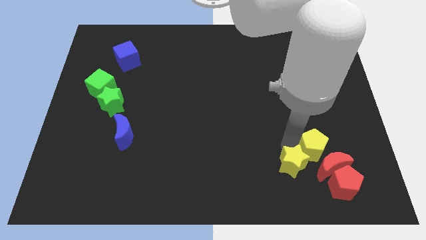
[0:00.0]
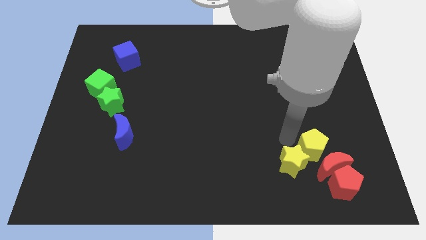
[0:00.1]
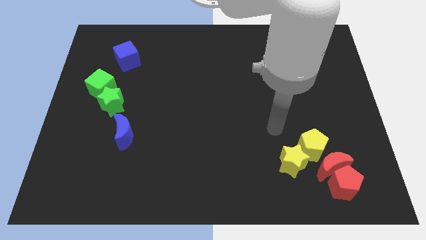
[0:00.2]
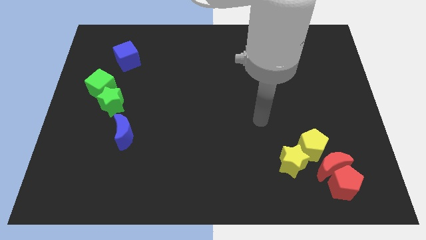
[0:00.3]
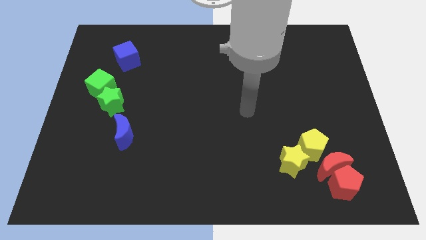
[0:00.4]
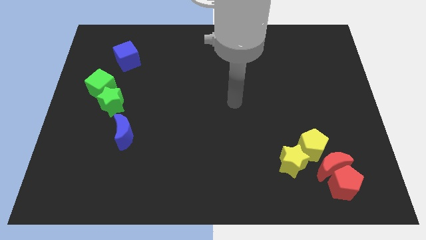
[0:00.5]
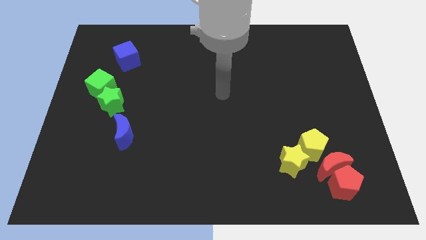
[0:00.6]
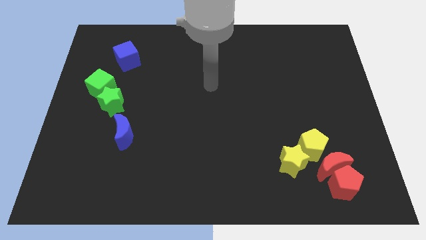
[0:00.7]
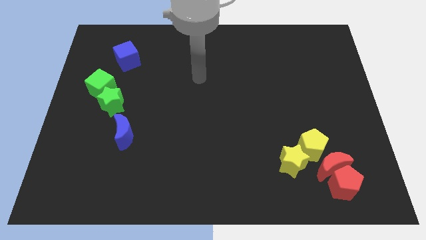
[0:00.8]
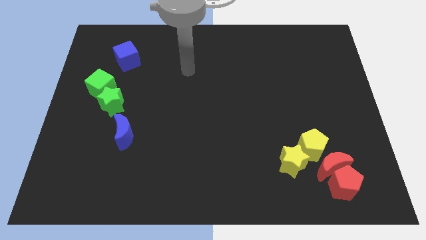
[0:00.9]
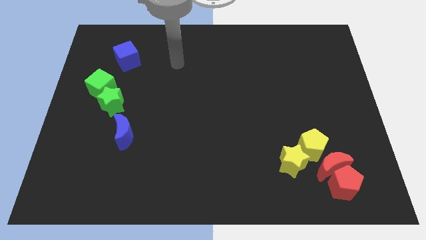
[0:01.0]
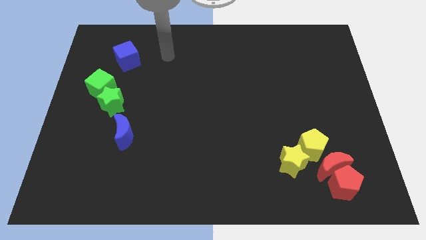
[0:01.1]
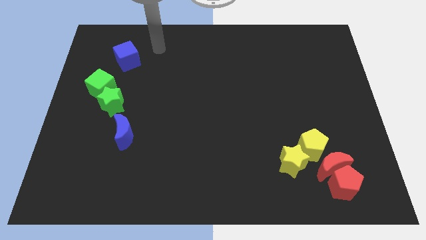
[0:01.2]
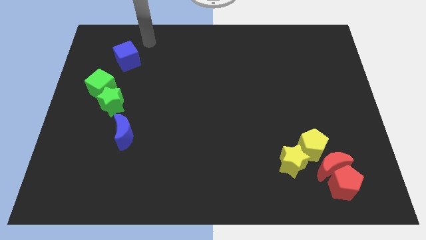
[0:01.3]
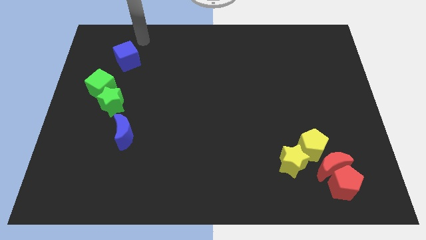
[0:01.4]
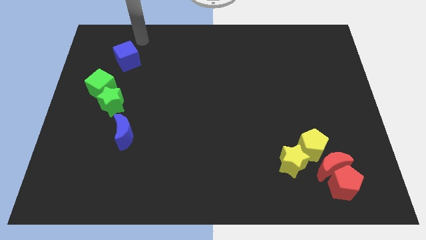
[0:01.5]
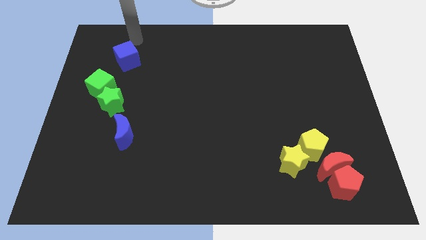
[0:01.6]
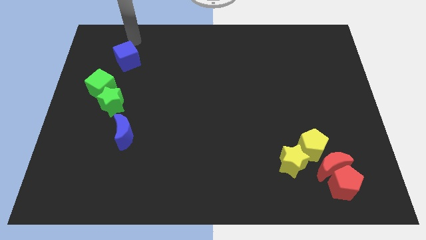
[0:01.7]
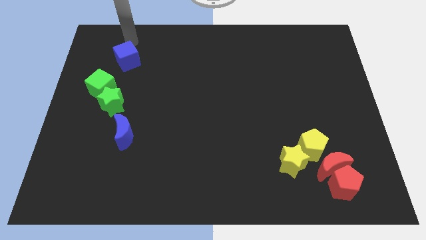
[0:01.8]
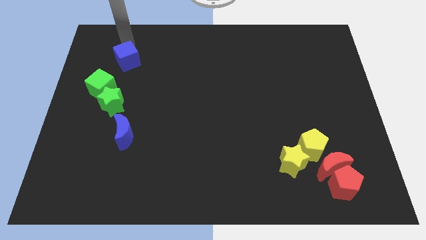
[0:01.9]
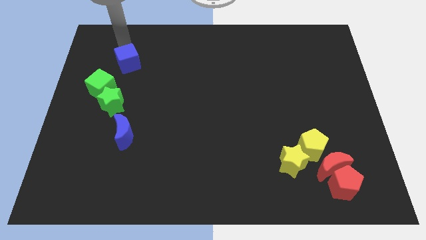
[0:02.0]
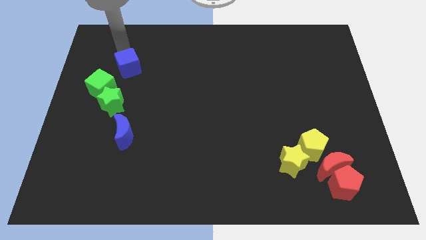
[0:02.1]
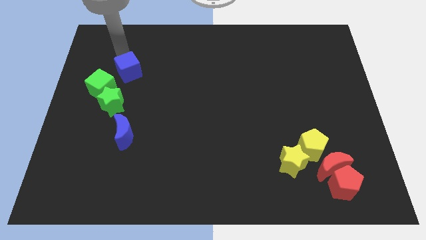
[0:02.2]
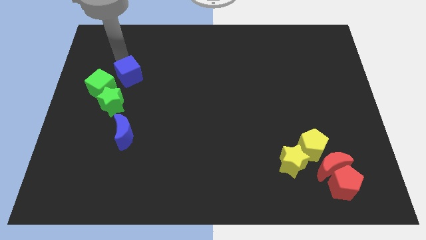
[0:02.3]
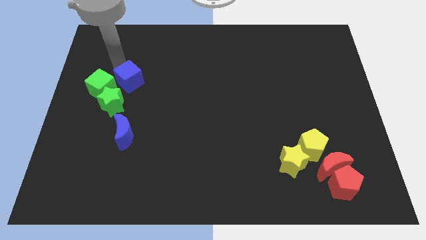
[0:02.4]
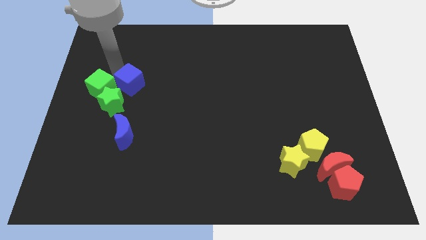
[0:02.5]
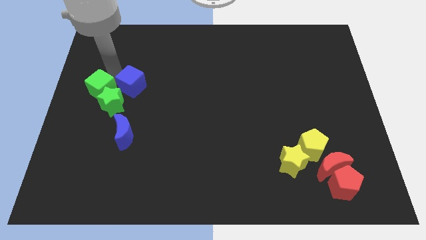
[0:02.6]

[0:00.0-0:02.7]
move the blue cube right to the green cube

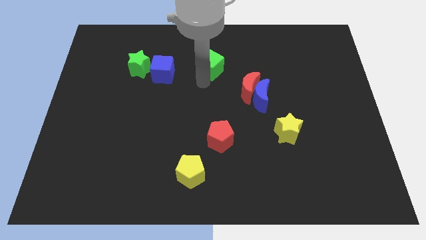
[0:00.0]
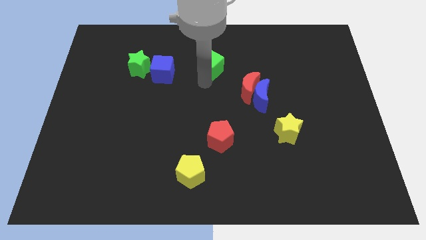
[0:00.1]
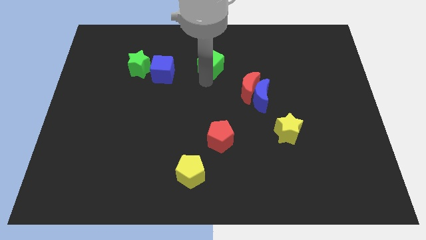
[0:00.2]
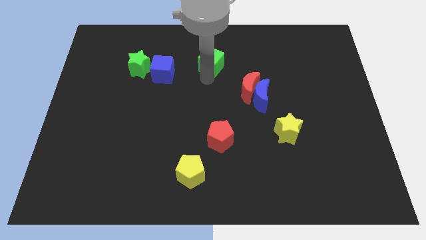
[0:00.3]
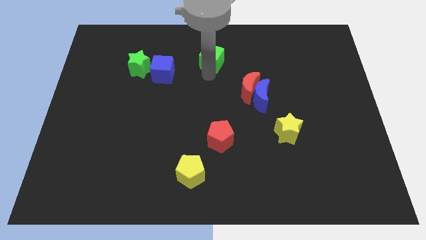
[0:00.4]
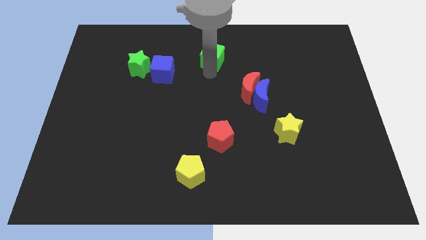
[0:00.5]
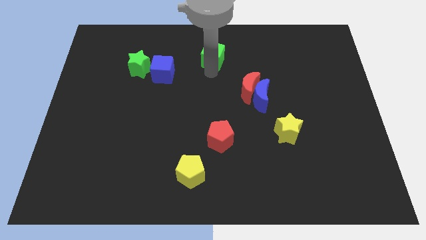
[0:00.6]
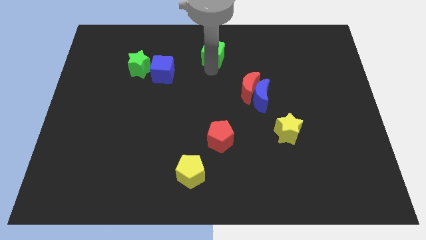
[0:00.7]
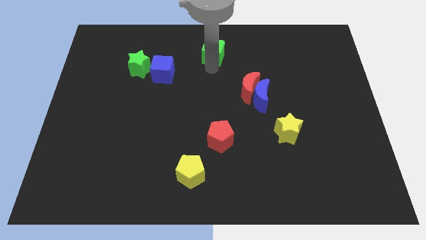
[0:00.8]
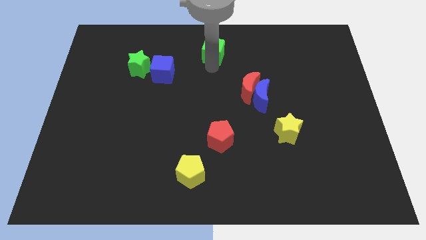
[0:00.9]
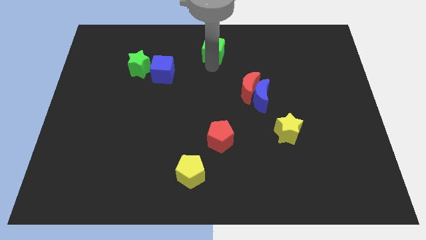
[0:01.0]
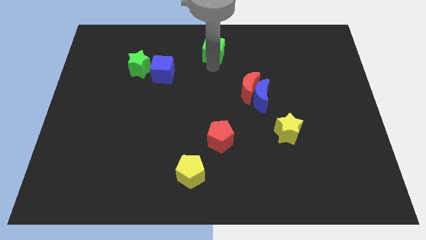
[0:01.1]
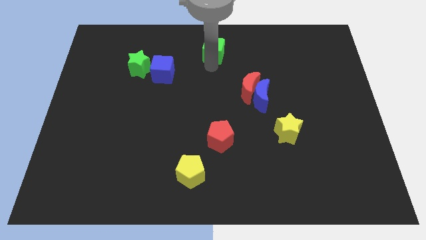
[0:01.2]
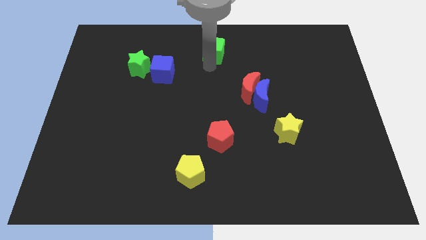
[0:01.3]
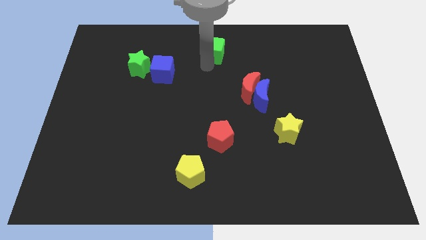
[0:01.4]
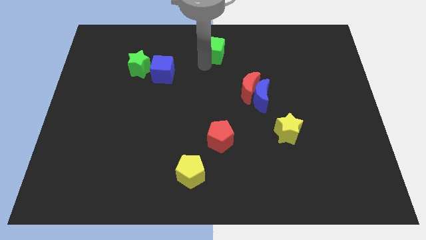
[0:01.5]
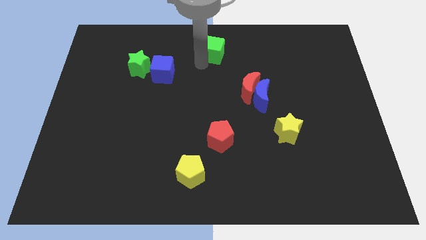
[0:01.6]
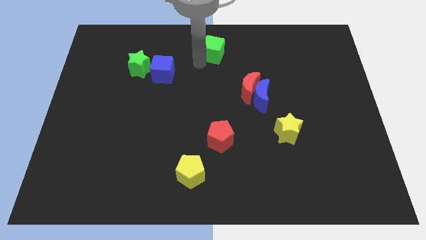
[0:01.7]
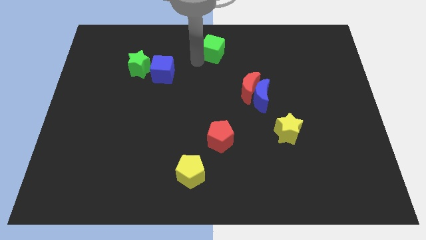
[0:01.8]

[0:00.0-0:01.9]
push green cube to the top center of board

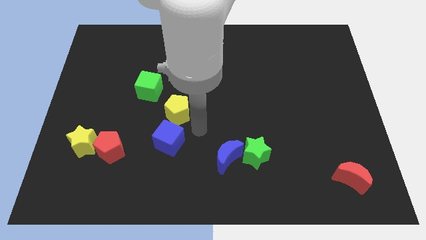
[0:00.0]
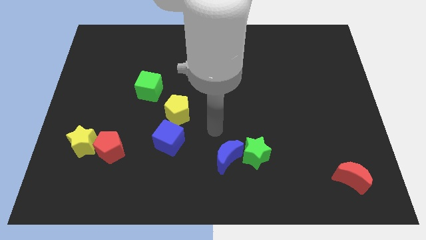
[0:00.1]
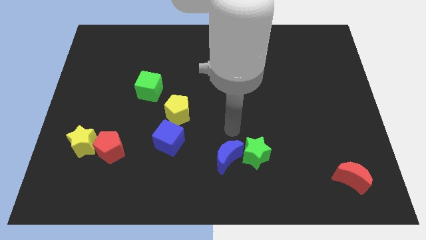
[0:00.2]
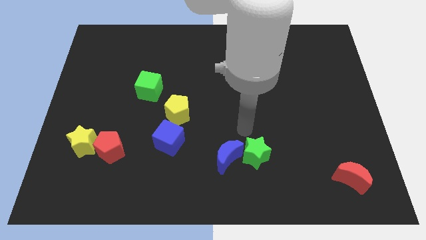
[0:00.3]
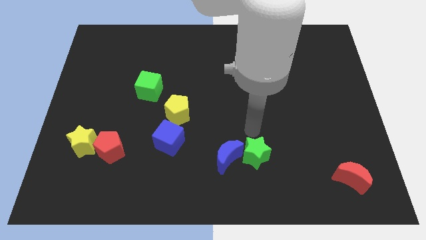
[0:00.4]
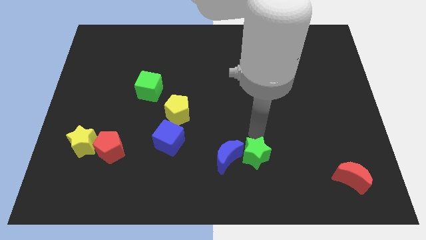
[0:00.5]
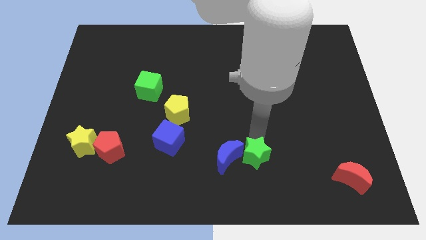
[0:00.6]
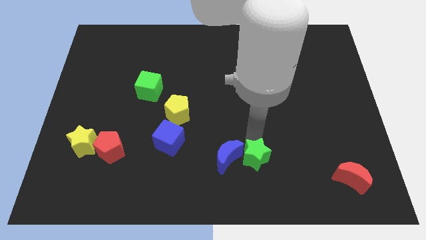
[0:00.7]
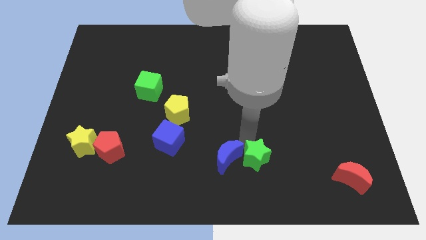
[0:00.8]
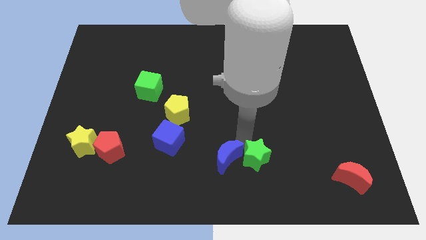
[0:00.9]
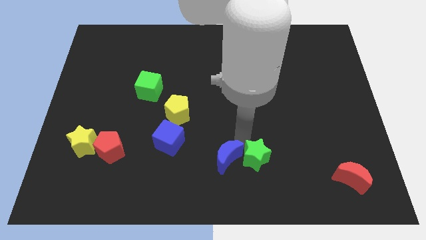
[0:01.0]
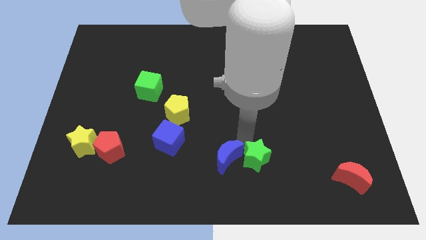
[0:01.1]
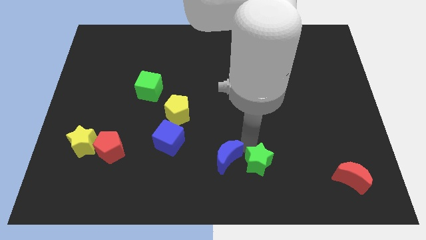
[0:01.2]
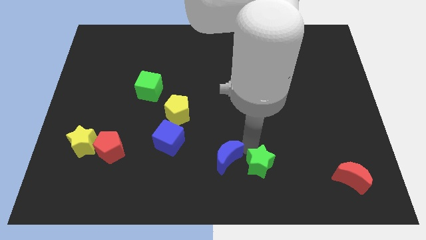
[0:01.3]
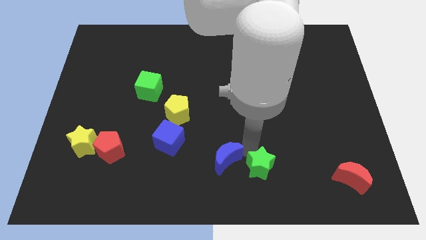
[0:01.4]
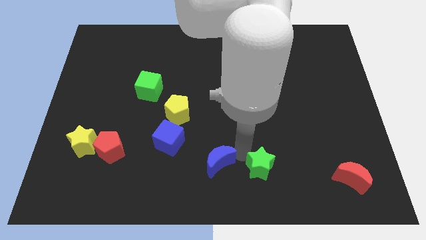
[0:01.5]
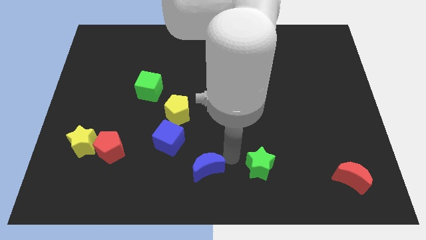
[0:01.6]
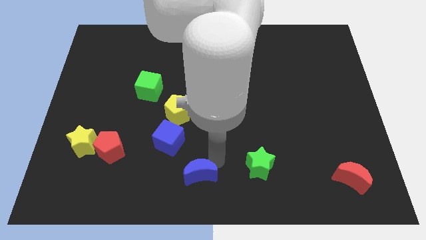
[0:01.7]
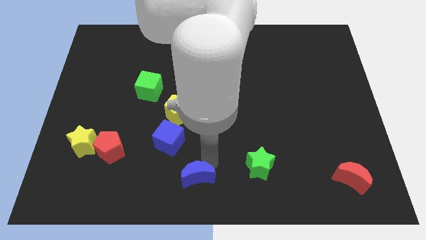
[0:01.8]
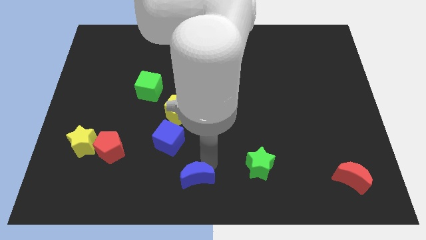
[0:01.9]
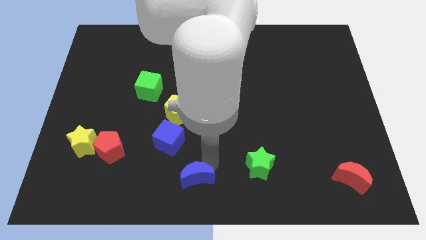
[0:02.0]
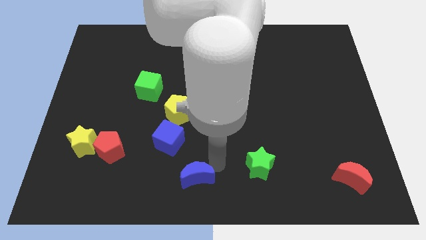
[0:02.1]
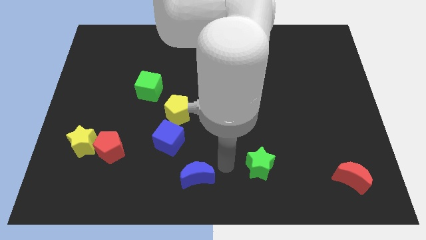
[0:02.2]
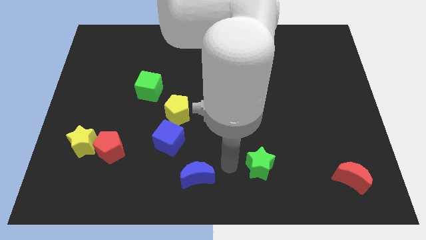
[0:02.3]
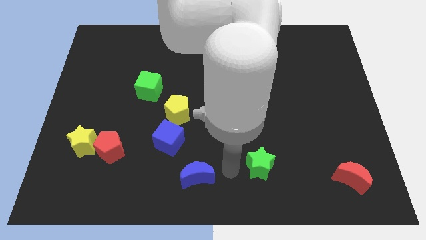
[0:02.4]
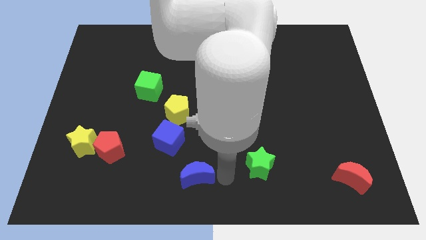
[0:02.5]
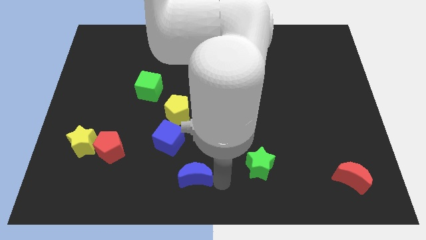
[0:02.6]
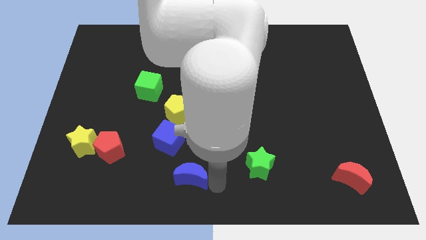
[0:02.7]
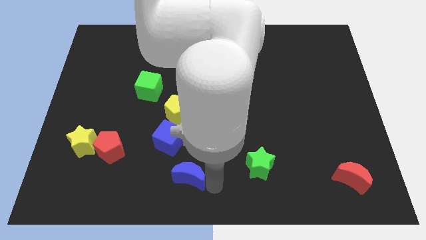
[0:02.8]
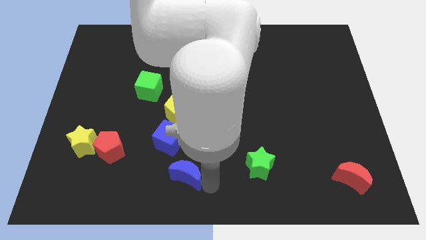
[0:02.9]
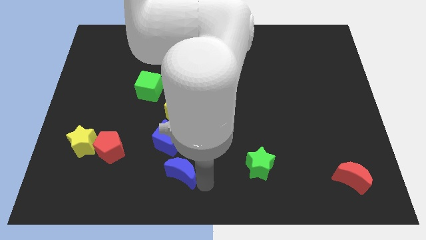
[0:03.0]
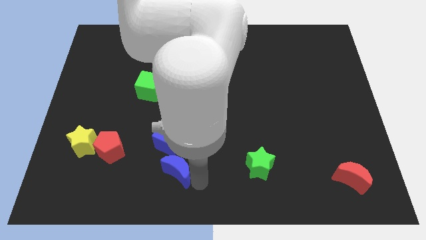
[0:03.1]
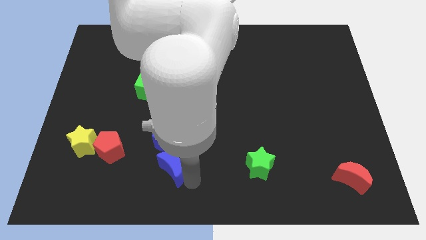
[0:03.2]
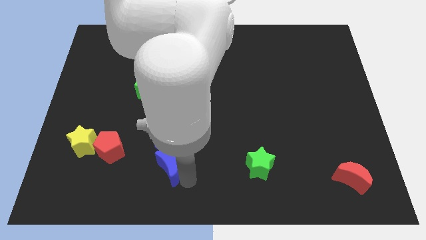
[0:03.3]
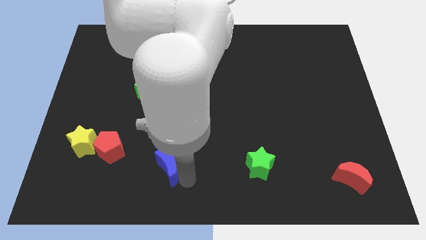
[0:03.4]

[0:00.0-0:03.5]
separate the blue moon from the green star

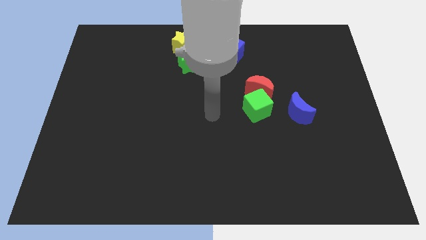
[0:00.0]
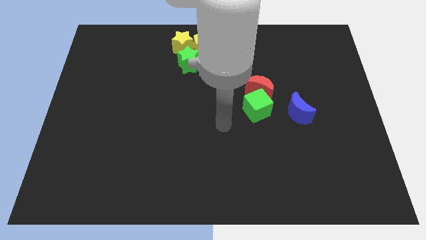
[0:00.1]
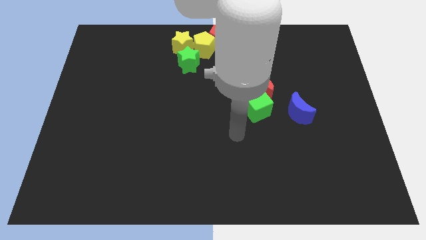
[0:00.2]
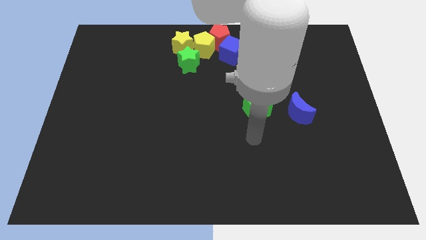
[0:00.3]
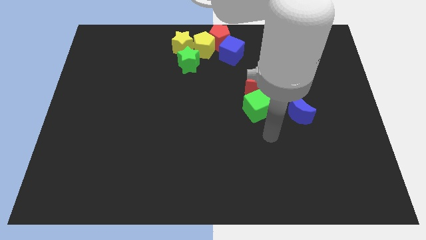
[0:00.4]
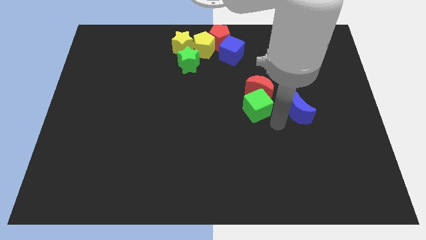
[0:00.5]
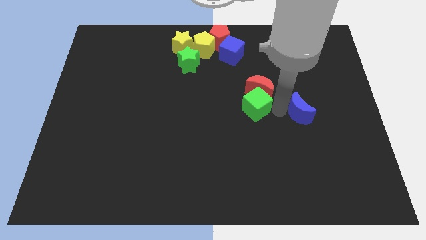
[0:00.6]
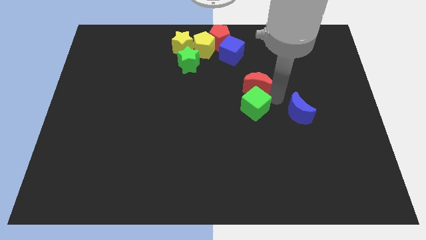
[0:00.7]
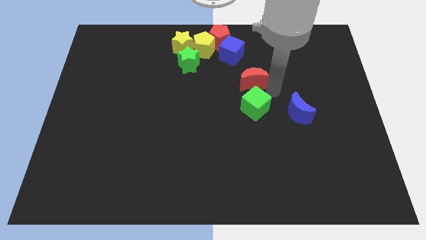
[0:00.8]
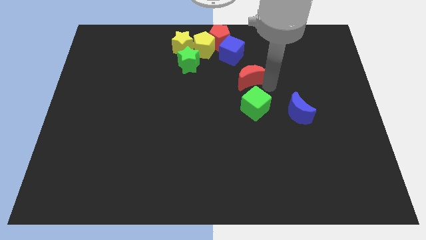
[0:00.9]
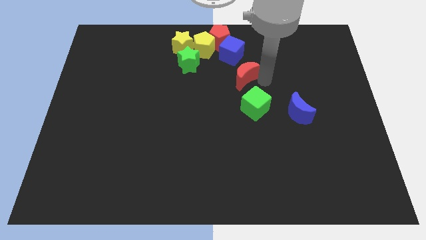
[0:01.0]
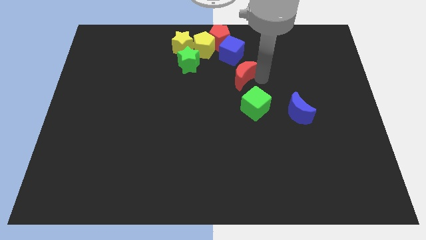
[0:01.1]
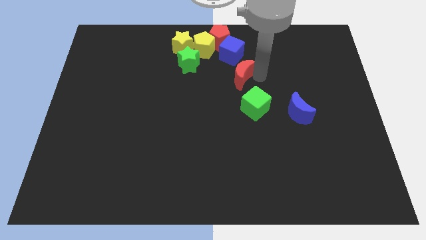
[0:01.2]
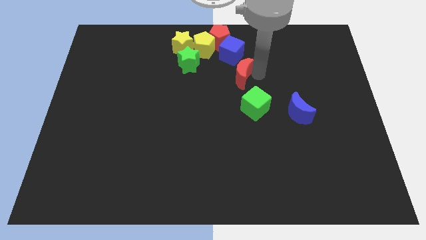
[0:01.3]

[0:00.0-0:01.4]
separate the red crescent from the green cube
